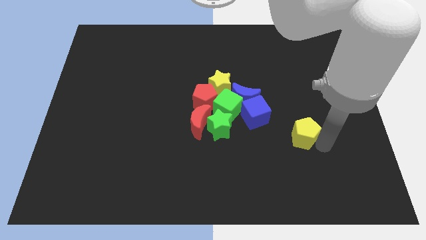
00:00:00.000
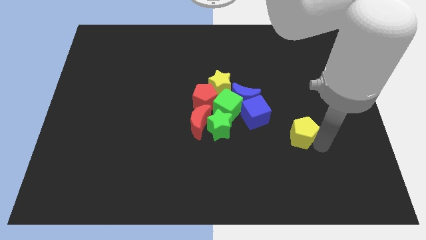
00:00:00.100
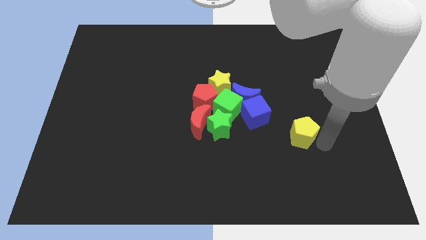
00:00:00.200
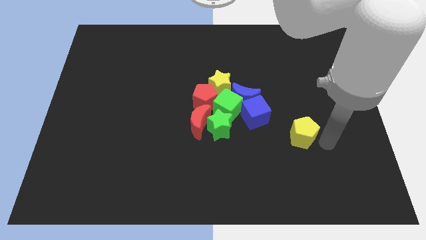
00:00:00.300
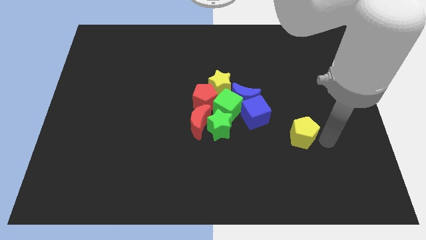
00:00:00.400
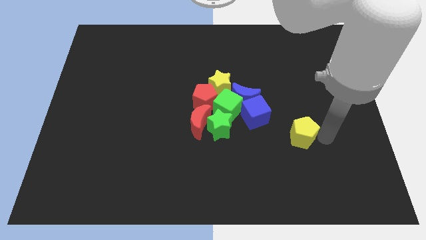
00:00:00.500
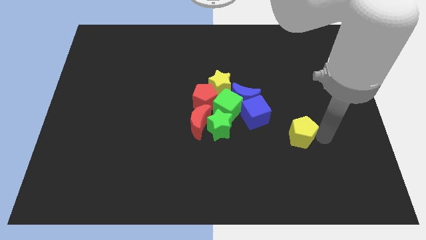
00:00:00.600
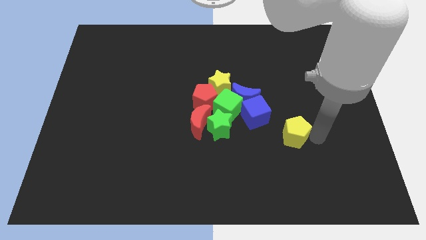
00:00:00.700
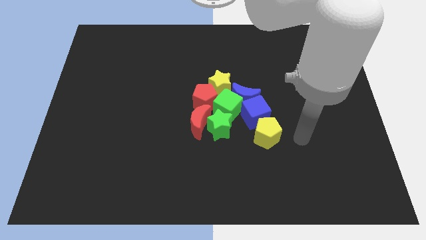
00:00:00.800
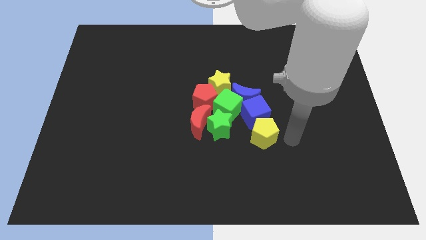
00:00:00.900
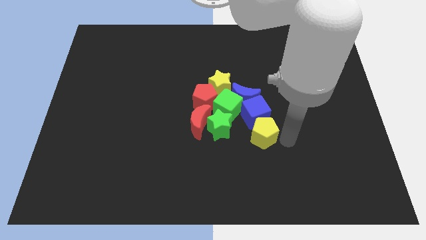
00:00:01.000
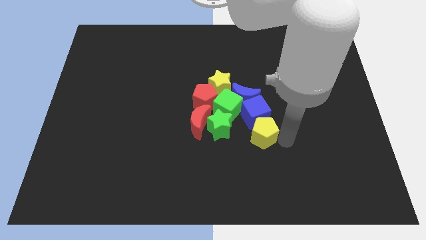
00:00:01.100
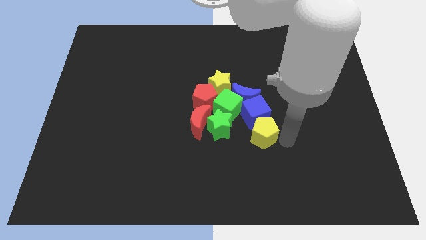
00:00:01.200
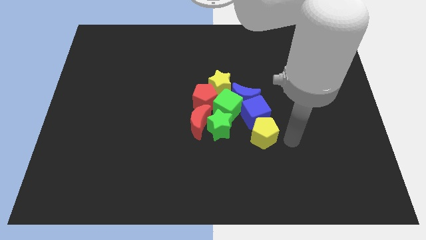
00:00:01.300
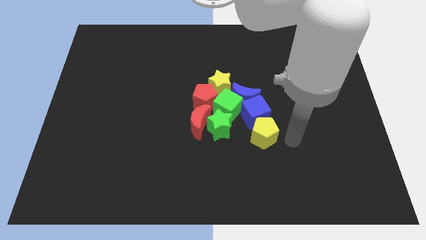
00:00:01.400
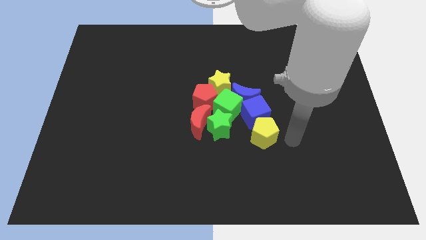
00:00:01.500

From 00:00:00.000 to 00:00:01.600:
place the yellow pentagon vertically below the blue cube

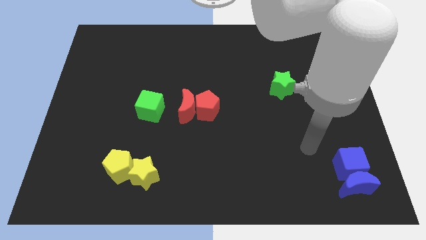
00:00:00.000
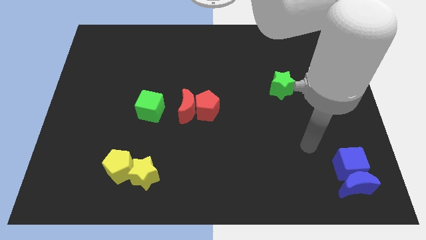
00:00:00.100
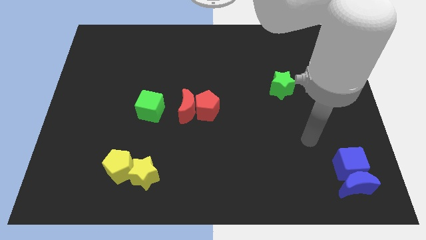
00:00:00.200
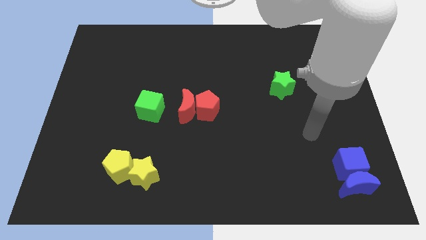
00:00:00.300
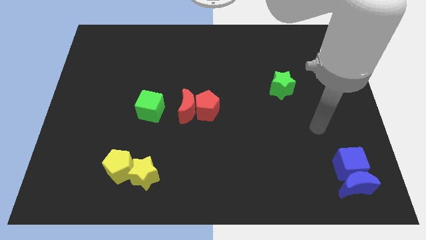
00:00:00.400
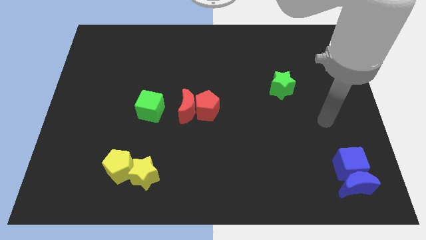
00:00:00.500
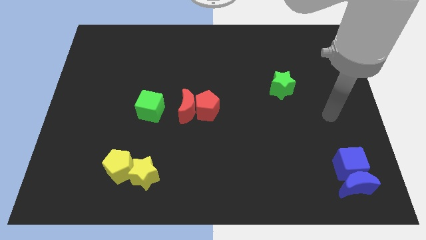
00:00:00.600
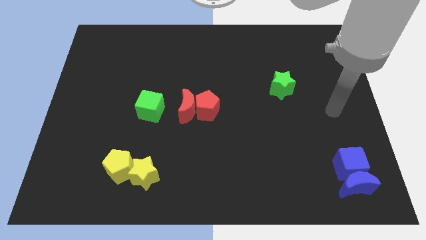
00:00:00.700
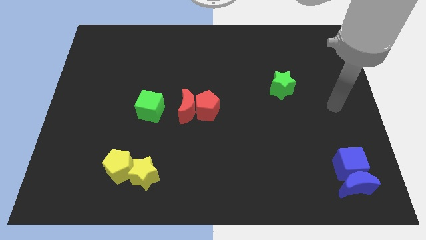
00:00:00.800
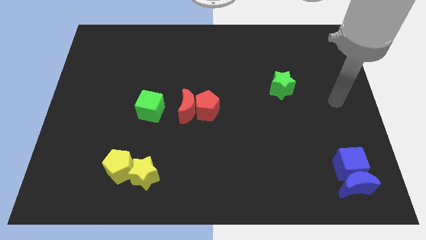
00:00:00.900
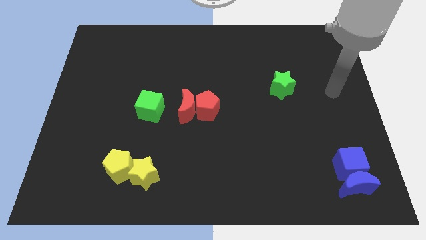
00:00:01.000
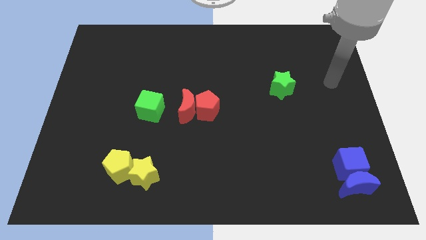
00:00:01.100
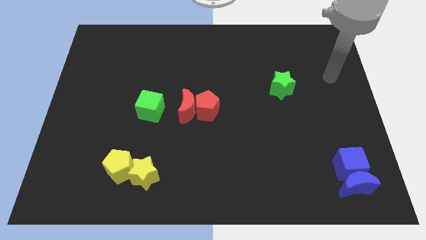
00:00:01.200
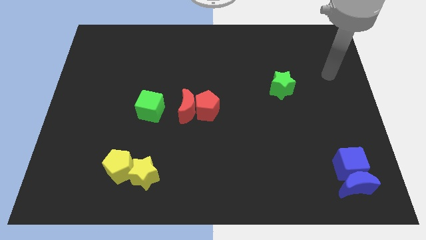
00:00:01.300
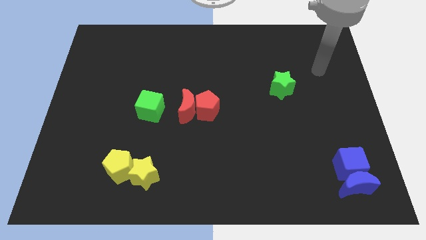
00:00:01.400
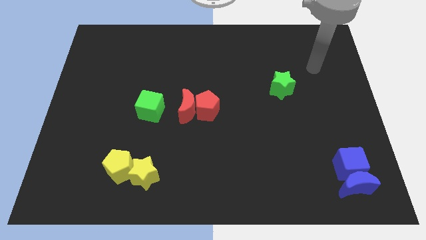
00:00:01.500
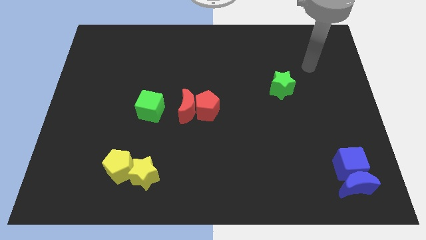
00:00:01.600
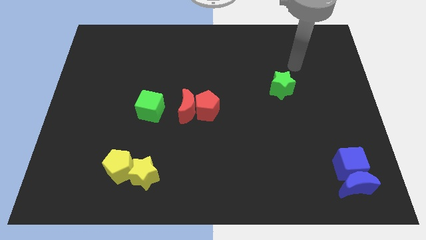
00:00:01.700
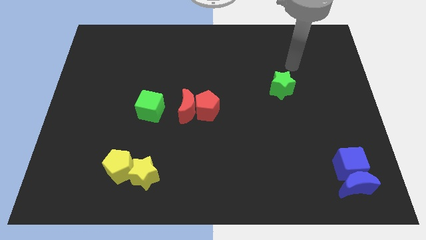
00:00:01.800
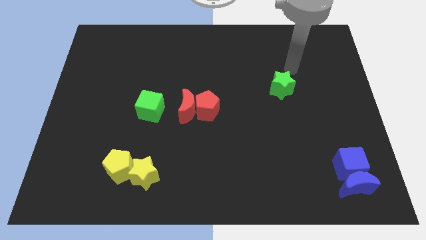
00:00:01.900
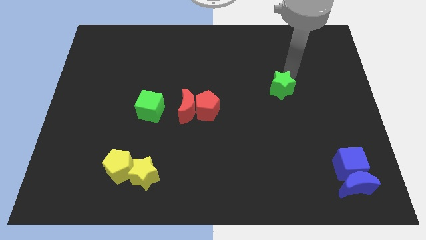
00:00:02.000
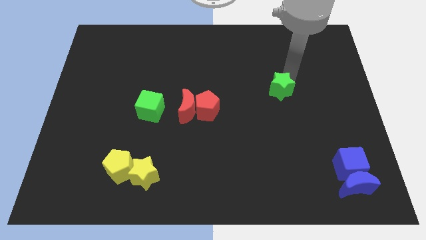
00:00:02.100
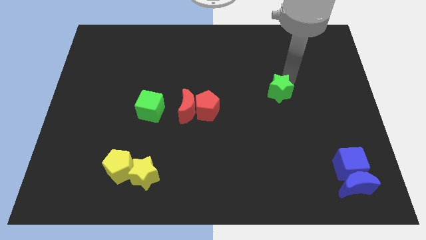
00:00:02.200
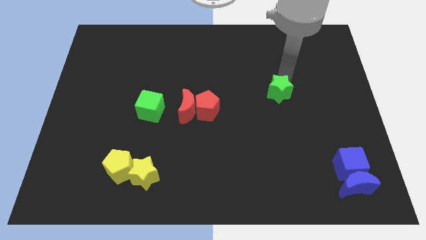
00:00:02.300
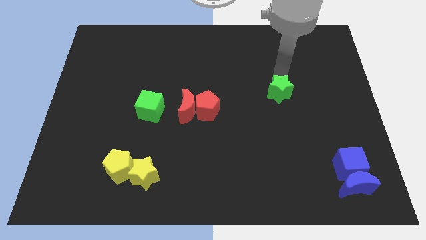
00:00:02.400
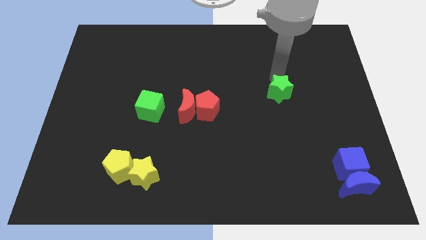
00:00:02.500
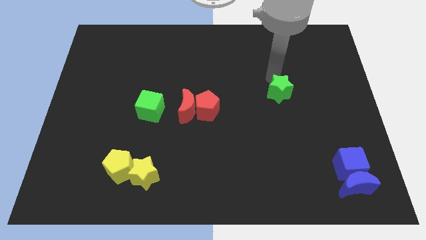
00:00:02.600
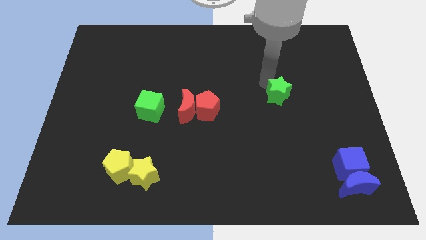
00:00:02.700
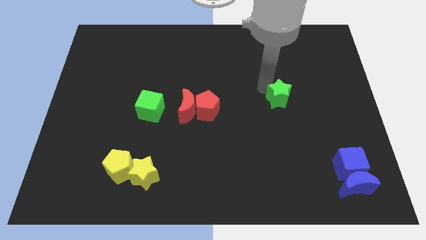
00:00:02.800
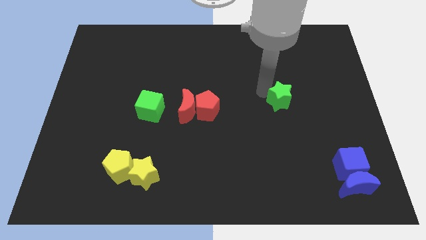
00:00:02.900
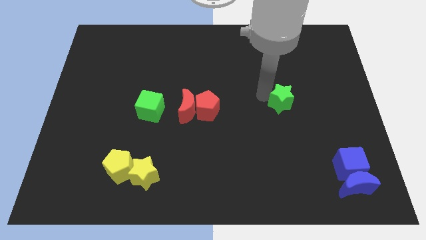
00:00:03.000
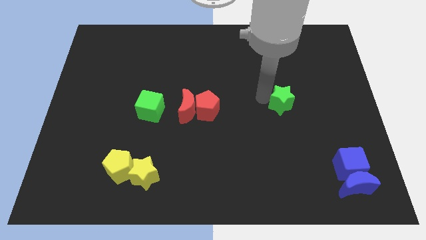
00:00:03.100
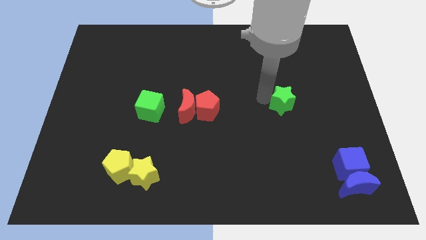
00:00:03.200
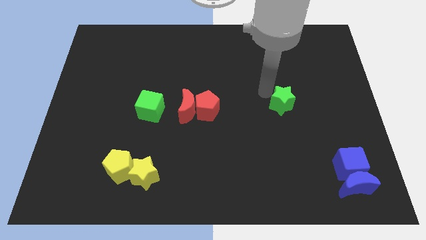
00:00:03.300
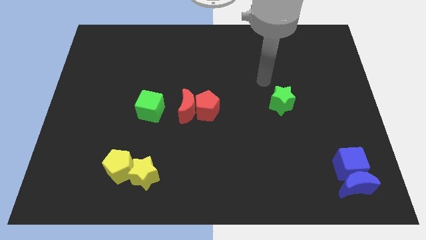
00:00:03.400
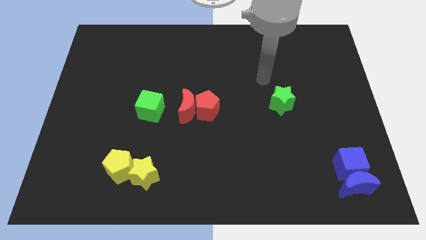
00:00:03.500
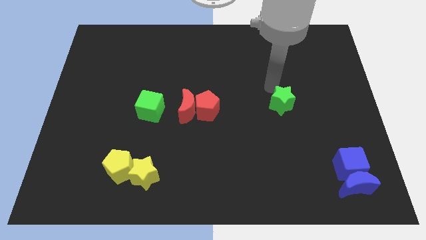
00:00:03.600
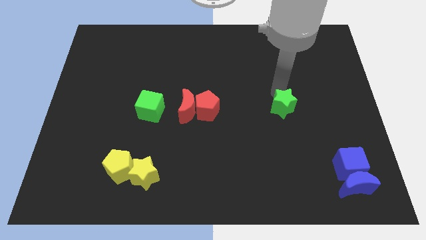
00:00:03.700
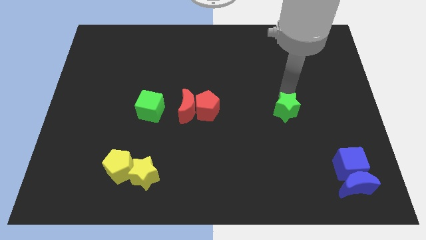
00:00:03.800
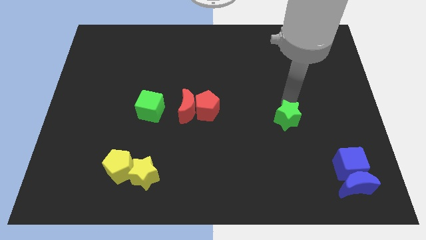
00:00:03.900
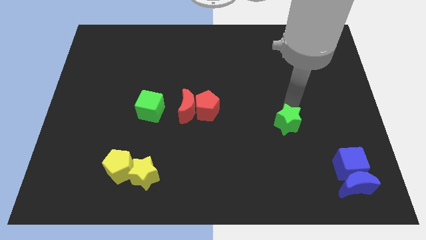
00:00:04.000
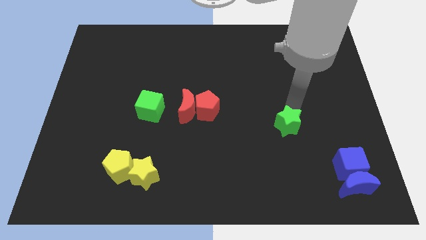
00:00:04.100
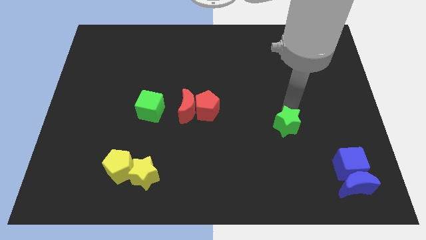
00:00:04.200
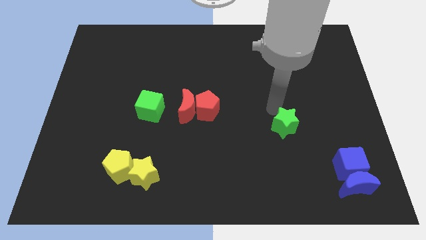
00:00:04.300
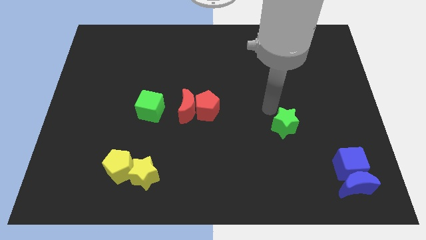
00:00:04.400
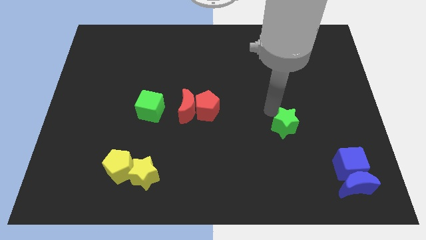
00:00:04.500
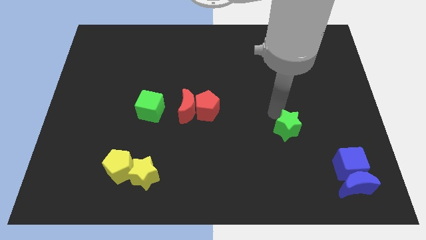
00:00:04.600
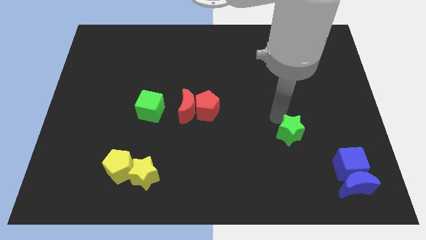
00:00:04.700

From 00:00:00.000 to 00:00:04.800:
push the green star slightly to towards the bottom side of the board

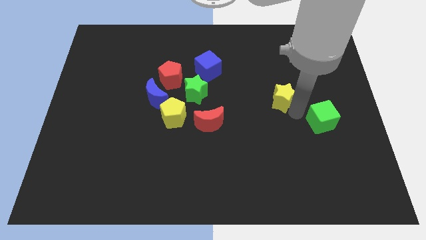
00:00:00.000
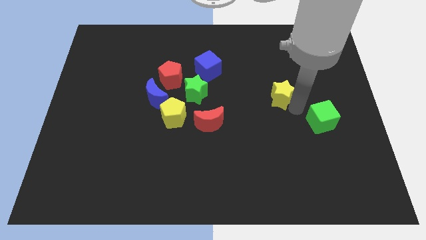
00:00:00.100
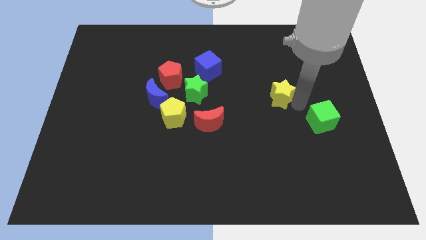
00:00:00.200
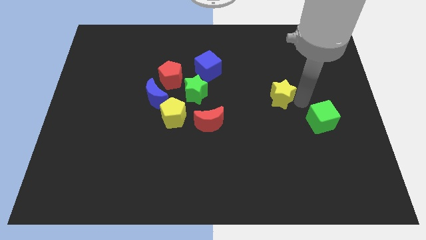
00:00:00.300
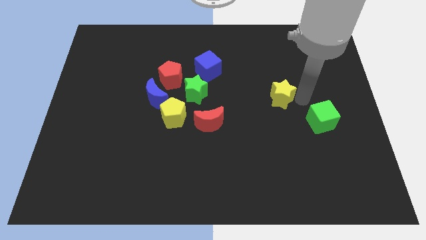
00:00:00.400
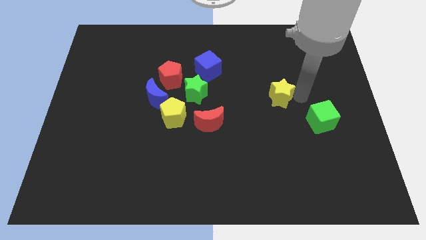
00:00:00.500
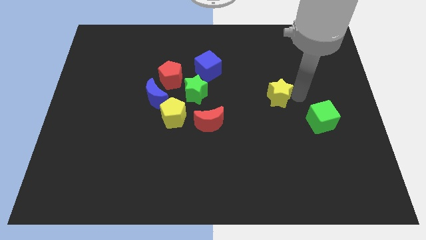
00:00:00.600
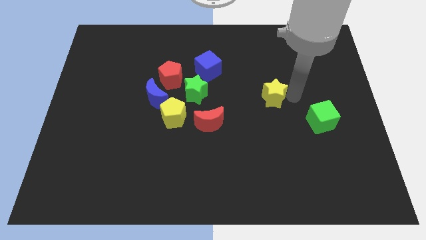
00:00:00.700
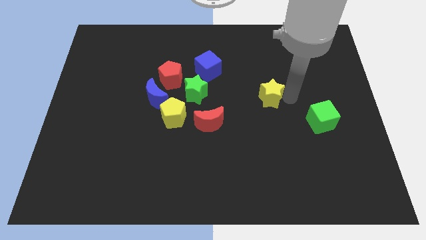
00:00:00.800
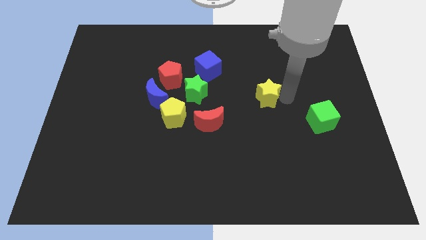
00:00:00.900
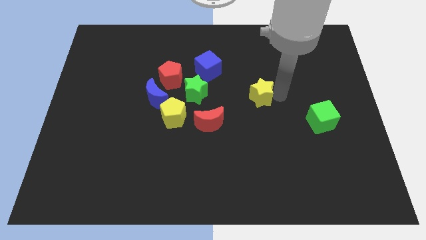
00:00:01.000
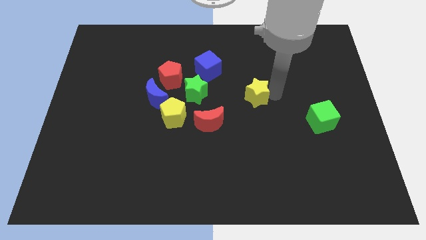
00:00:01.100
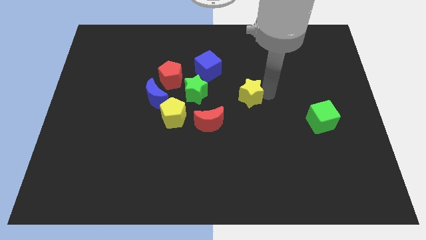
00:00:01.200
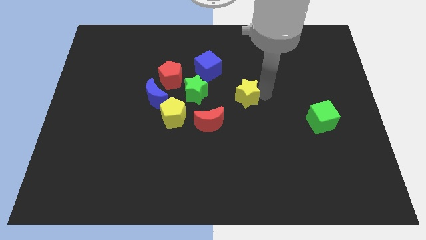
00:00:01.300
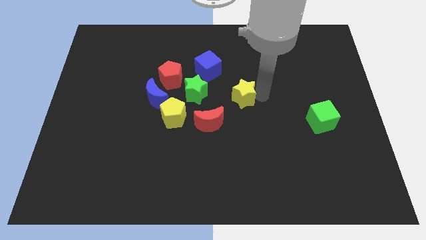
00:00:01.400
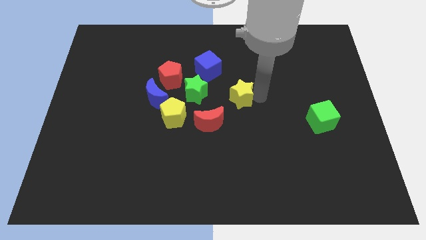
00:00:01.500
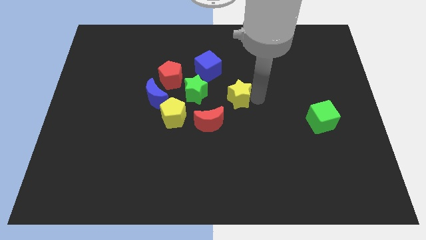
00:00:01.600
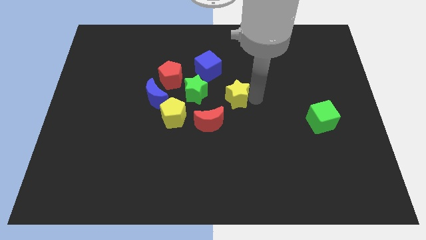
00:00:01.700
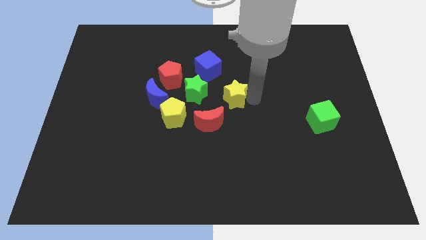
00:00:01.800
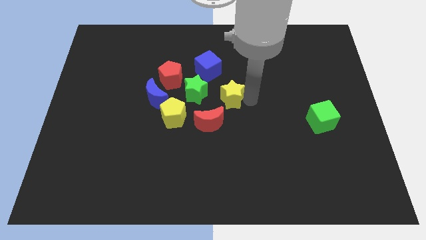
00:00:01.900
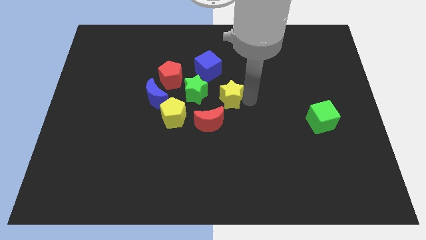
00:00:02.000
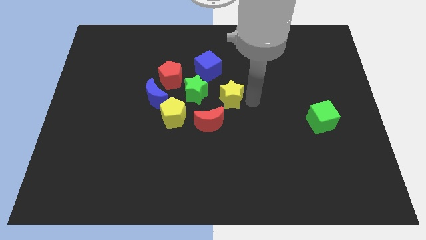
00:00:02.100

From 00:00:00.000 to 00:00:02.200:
push the yellow star to the top right to the red crescent

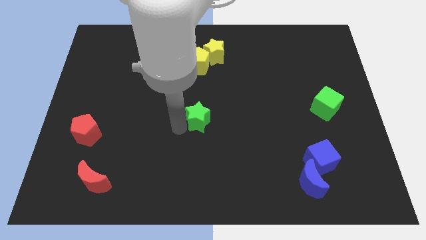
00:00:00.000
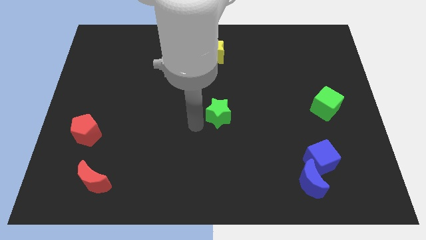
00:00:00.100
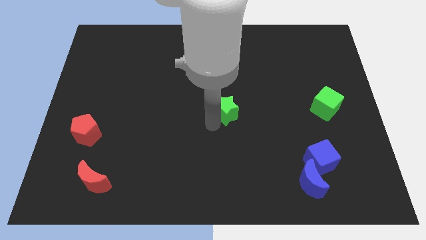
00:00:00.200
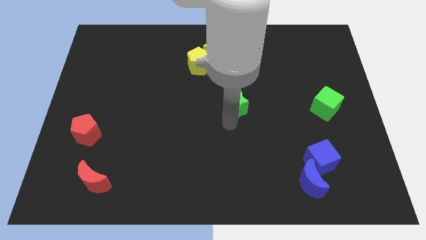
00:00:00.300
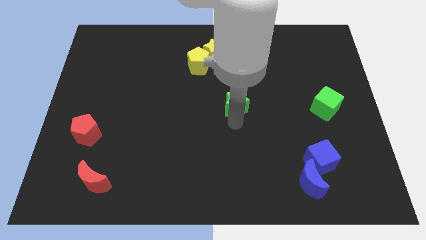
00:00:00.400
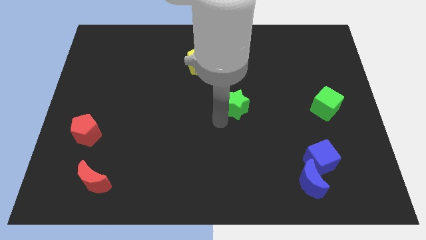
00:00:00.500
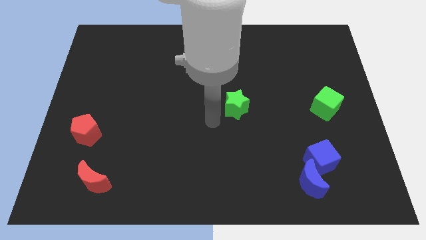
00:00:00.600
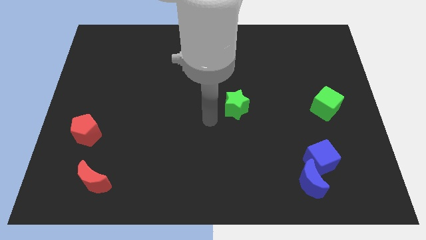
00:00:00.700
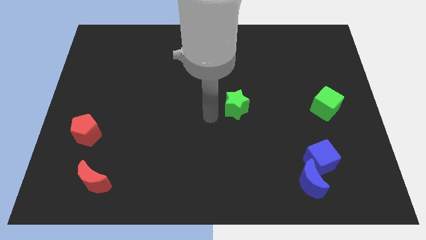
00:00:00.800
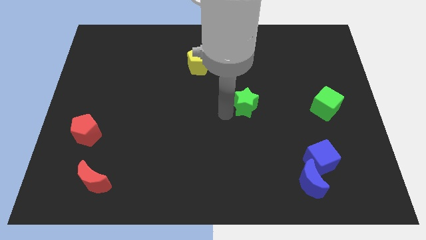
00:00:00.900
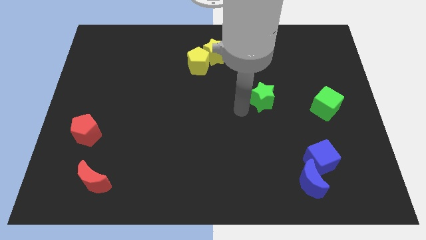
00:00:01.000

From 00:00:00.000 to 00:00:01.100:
move the green star diagonal to the blue cube
